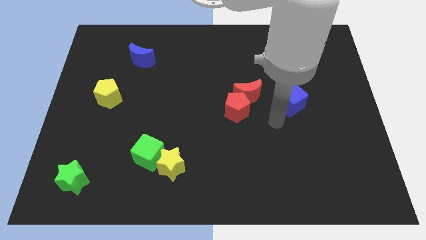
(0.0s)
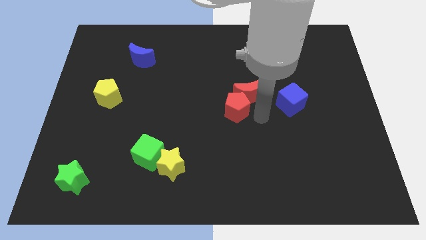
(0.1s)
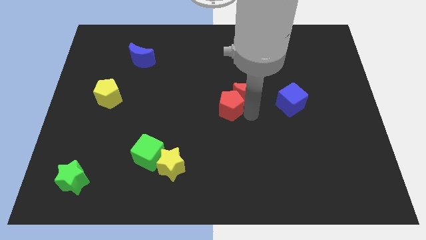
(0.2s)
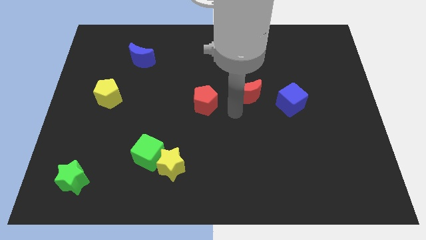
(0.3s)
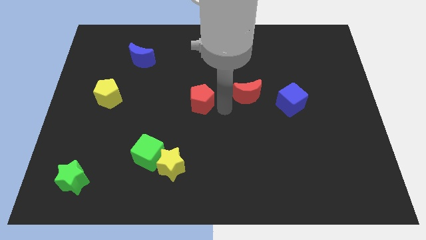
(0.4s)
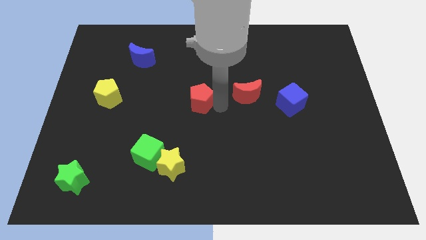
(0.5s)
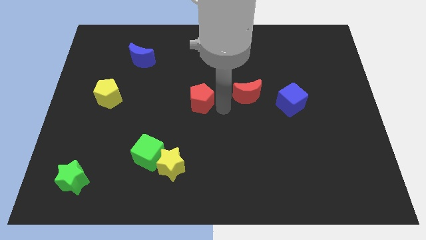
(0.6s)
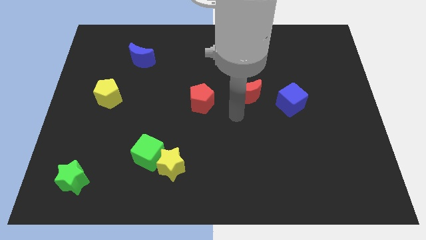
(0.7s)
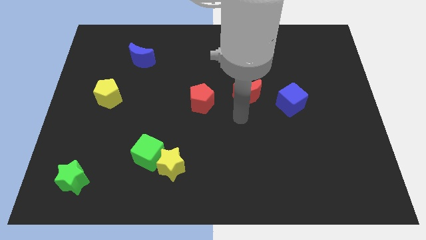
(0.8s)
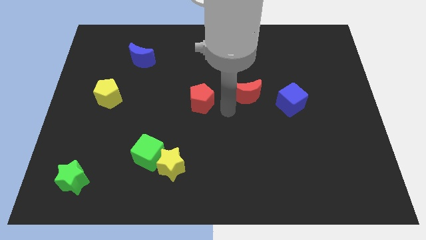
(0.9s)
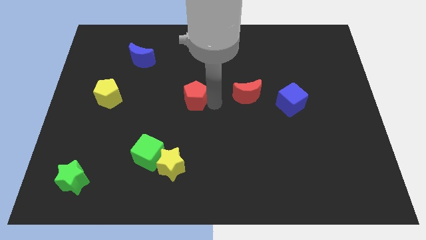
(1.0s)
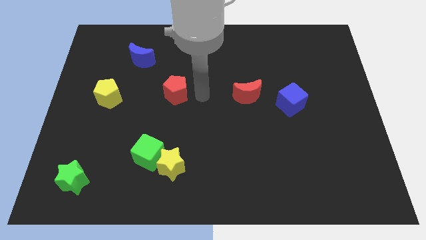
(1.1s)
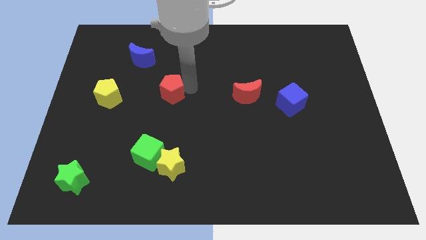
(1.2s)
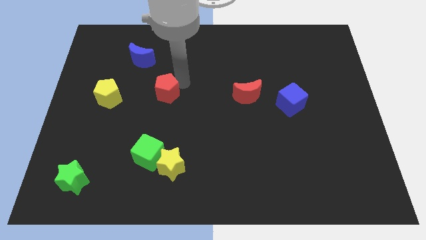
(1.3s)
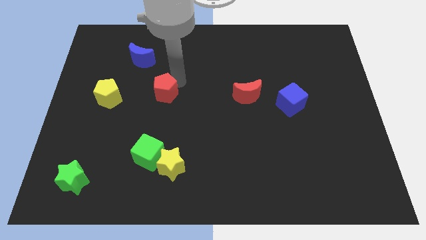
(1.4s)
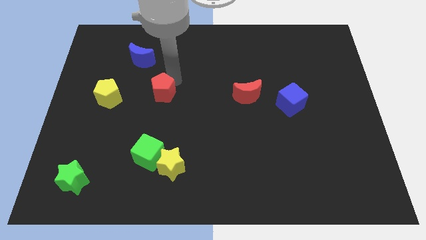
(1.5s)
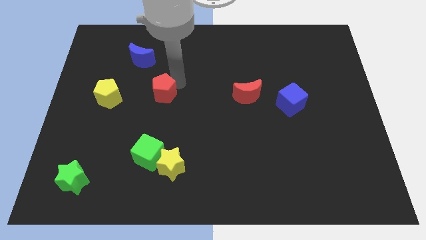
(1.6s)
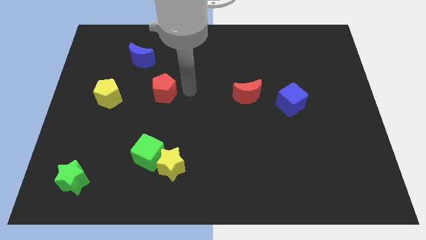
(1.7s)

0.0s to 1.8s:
place the red pentagon above the green cube

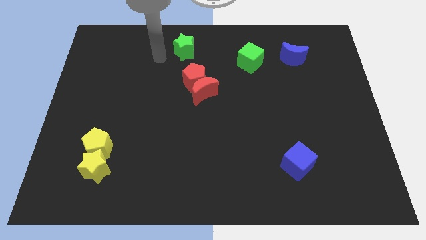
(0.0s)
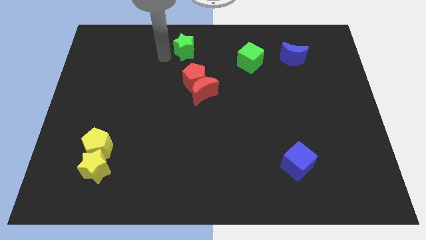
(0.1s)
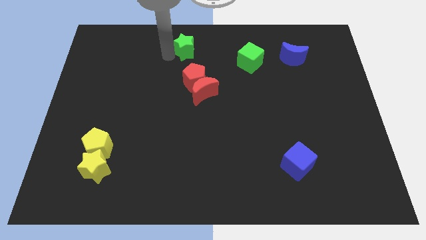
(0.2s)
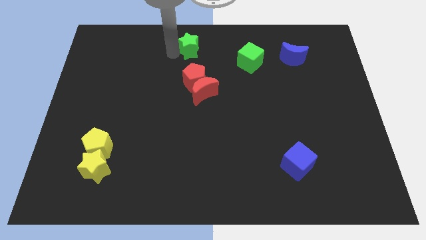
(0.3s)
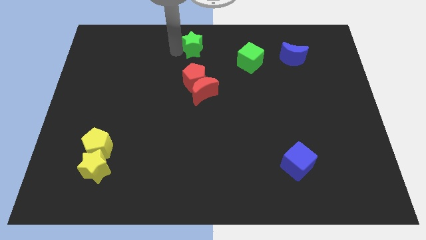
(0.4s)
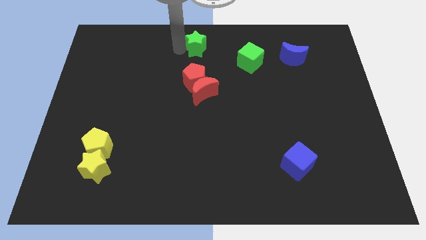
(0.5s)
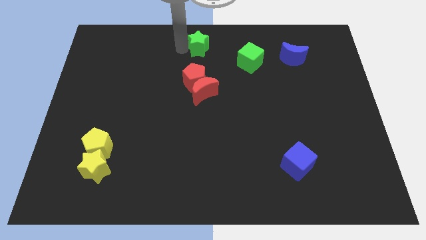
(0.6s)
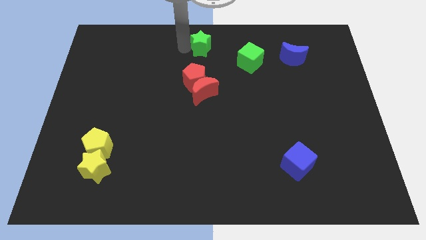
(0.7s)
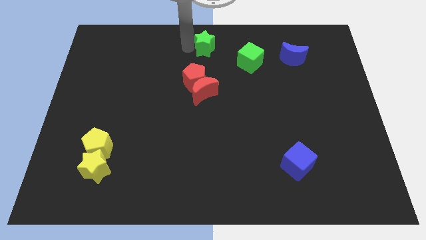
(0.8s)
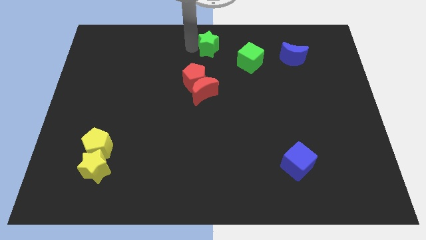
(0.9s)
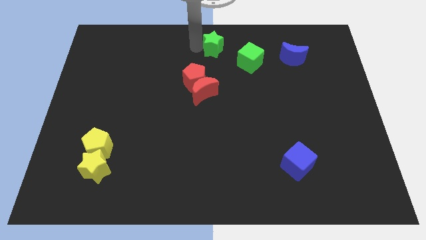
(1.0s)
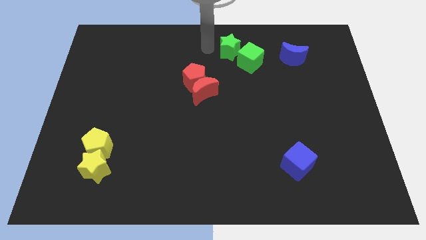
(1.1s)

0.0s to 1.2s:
move green star close to green cube

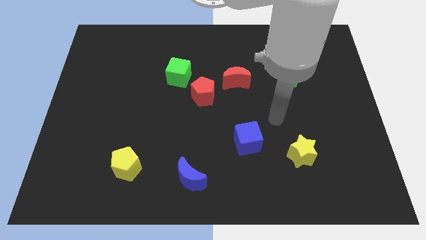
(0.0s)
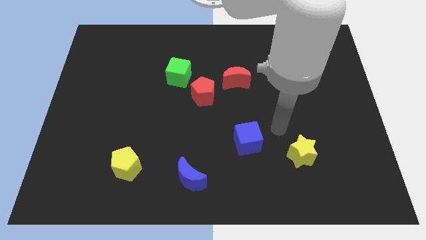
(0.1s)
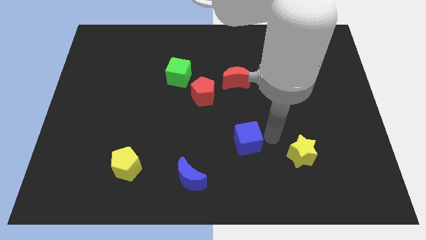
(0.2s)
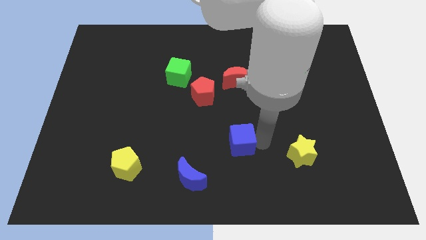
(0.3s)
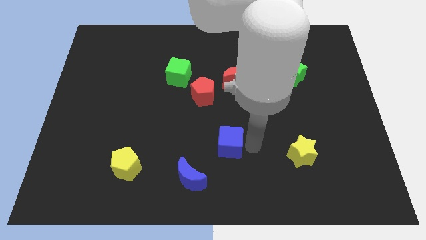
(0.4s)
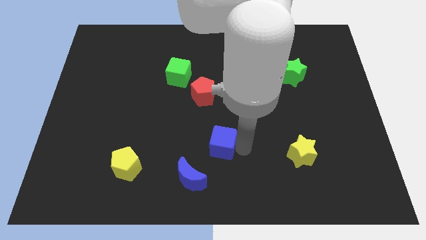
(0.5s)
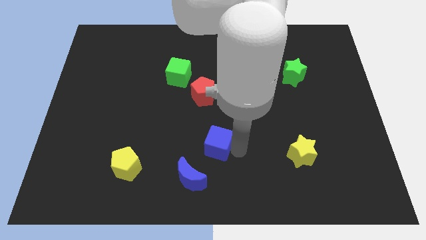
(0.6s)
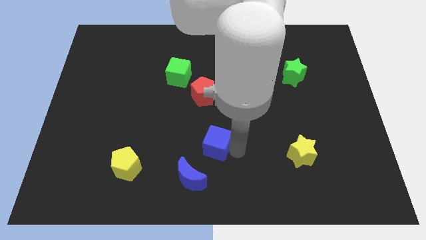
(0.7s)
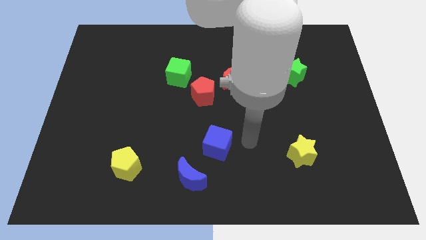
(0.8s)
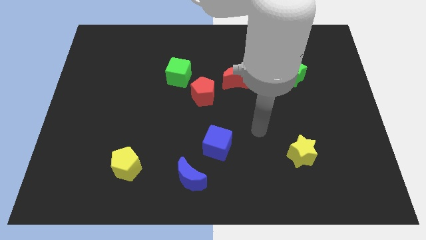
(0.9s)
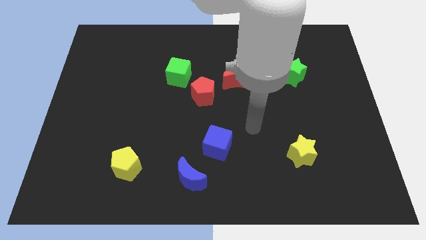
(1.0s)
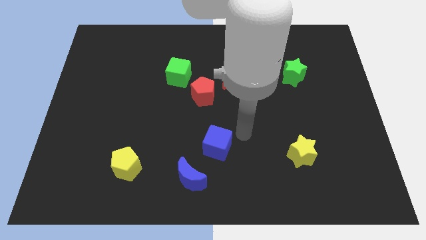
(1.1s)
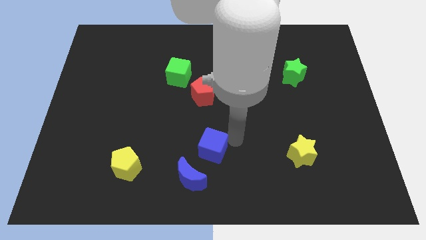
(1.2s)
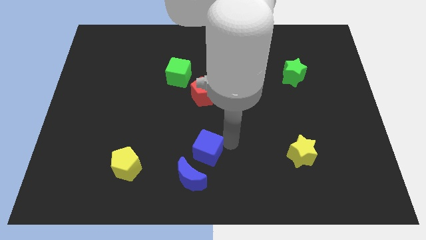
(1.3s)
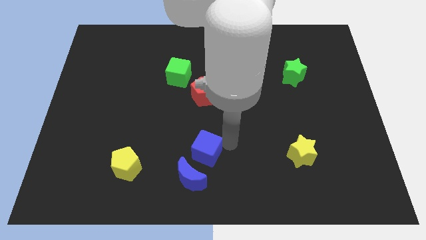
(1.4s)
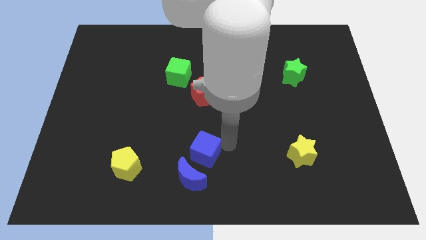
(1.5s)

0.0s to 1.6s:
move the blue cube close to the blue crescent

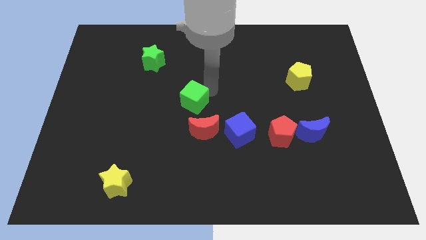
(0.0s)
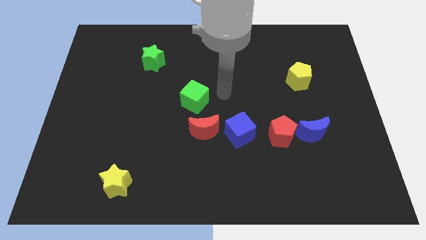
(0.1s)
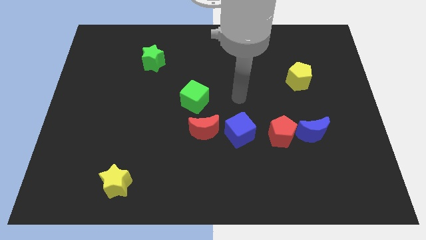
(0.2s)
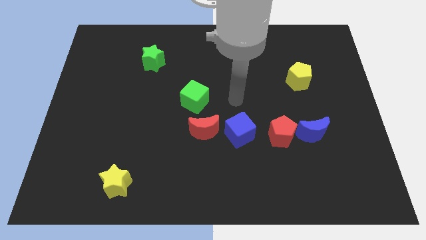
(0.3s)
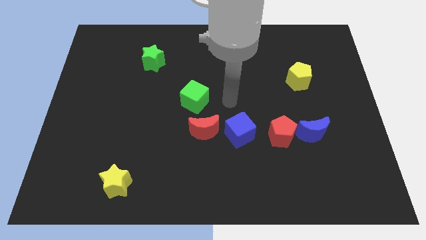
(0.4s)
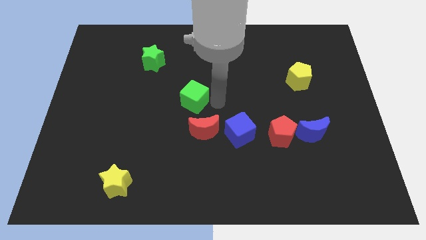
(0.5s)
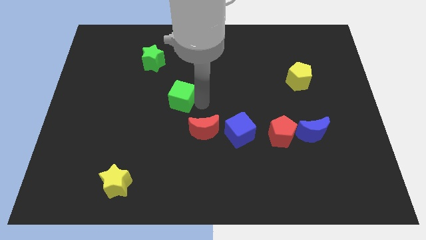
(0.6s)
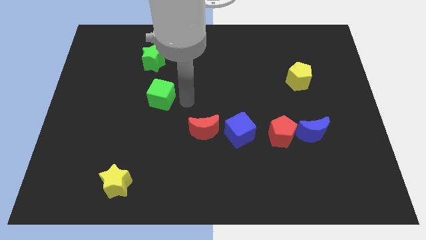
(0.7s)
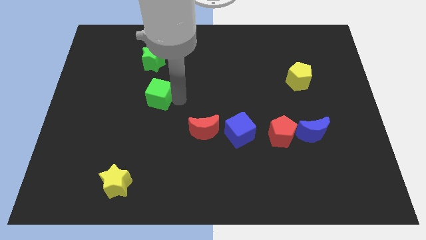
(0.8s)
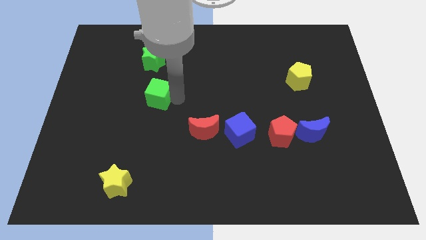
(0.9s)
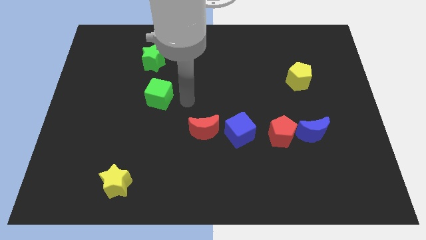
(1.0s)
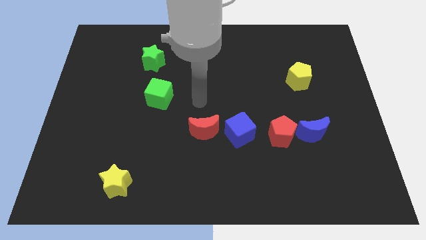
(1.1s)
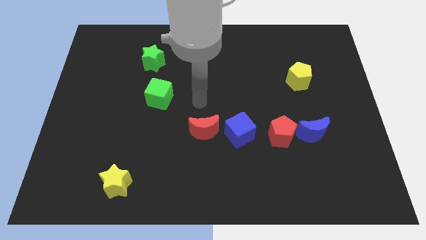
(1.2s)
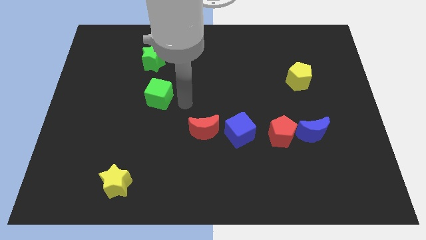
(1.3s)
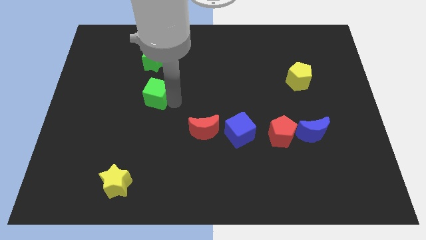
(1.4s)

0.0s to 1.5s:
slide the green cube to the left

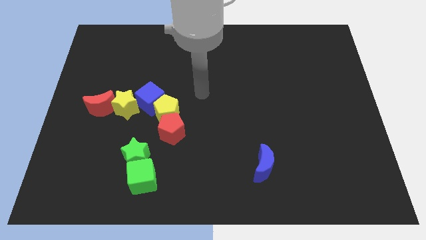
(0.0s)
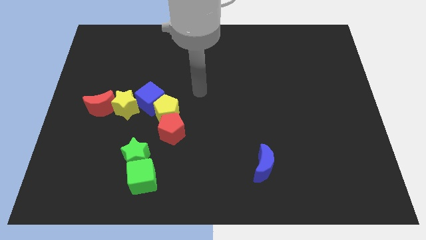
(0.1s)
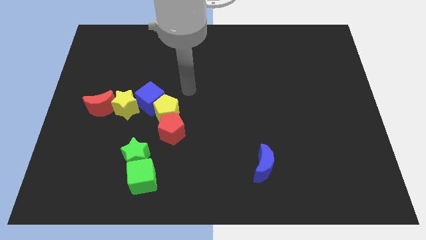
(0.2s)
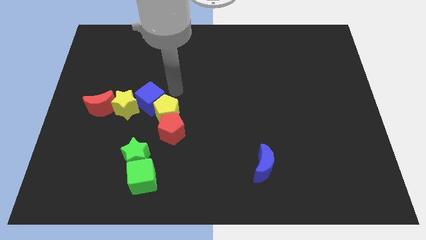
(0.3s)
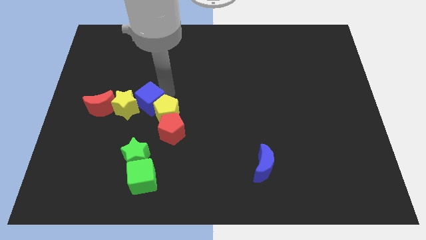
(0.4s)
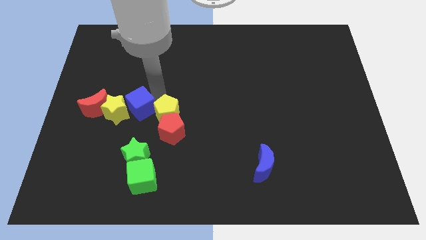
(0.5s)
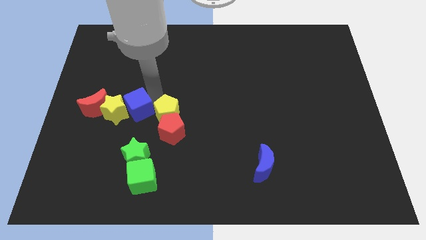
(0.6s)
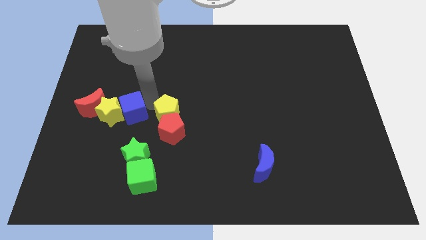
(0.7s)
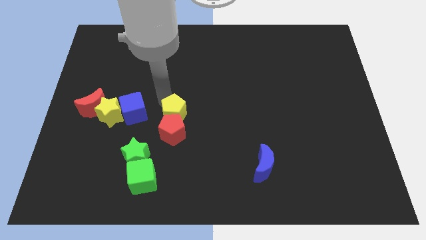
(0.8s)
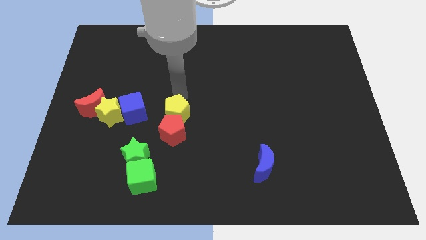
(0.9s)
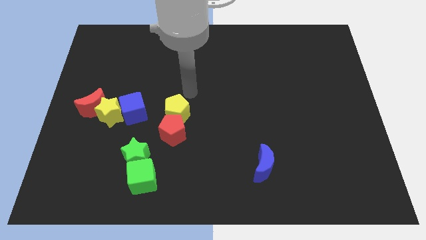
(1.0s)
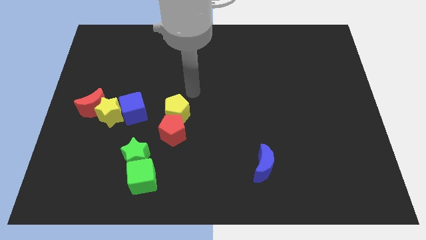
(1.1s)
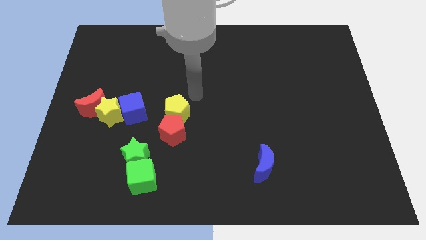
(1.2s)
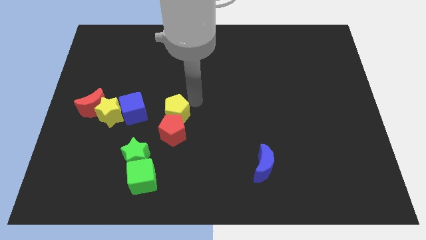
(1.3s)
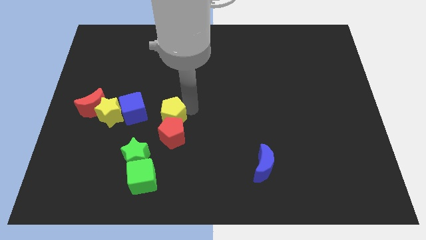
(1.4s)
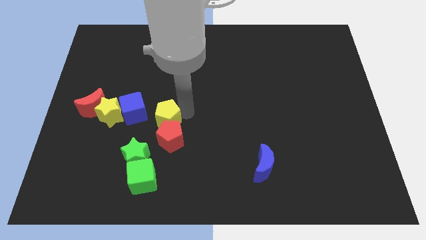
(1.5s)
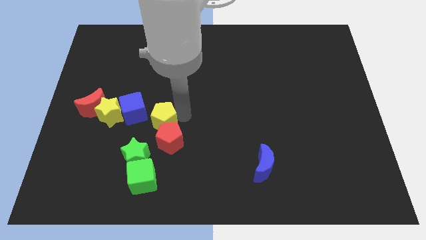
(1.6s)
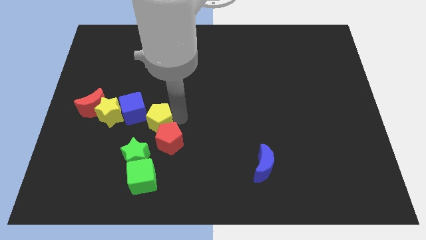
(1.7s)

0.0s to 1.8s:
move the blue cube into the yellow star

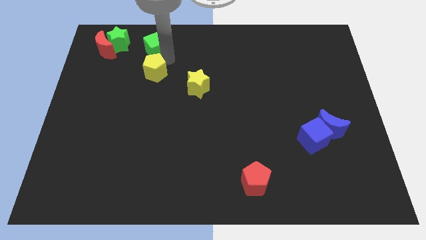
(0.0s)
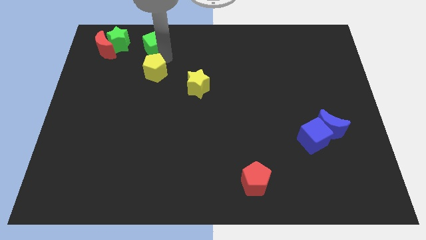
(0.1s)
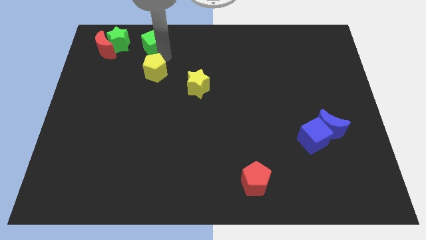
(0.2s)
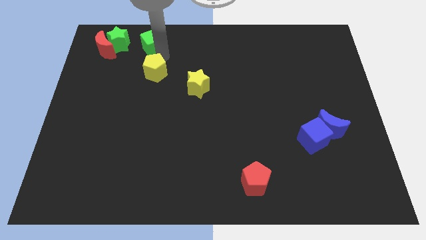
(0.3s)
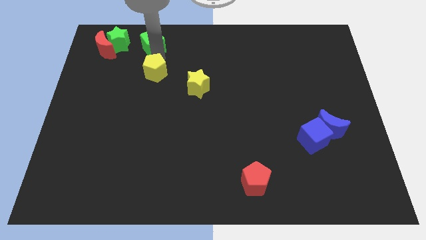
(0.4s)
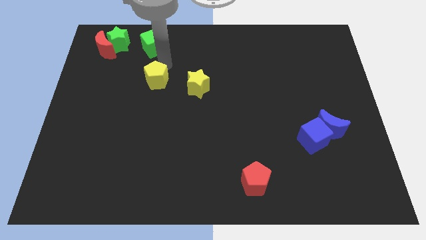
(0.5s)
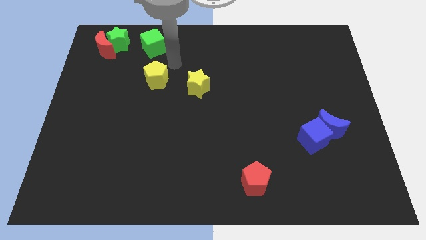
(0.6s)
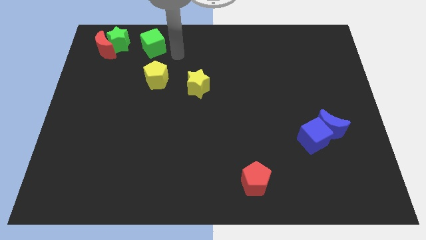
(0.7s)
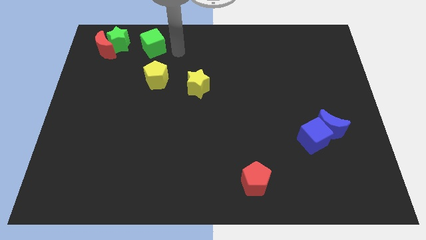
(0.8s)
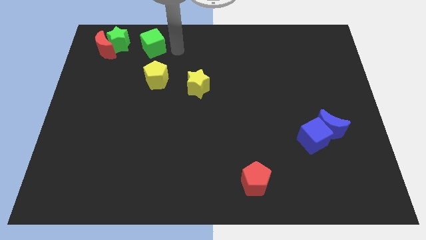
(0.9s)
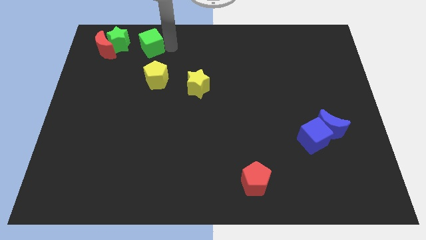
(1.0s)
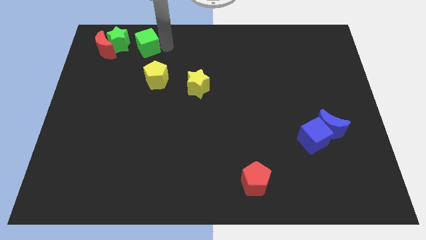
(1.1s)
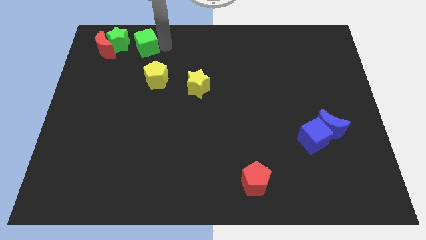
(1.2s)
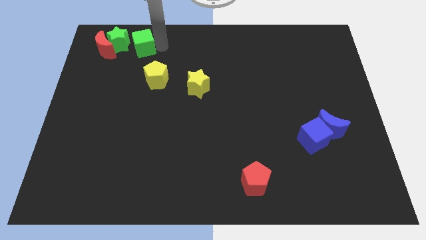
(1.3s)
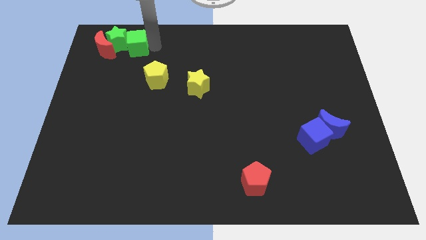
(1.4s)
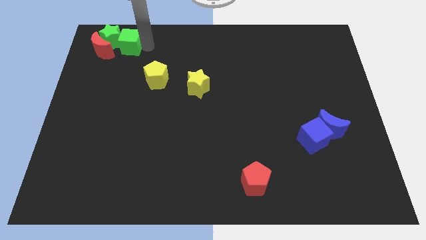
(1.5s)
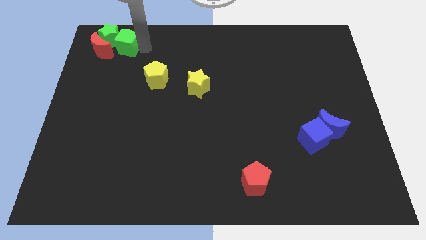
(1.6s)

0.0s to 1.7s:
push green cube into the green star
